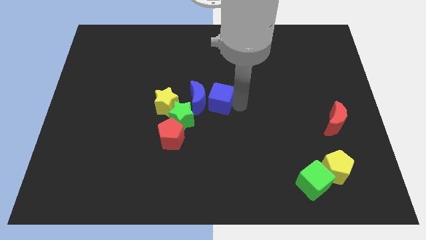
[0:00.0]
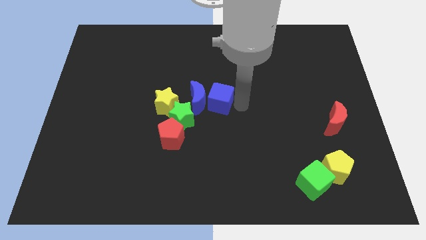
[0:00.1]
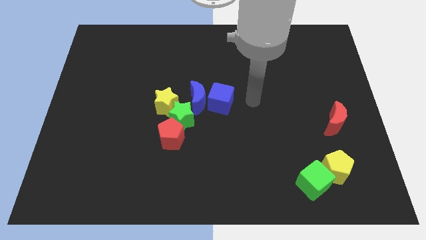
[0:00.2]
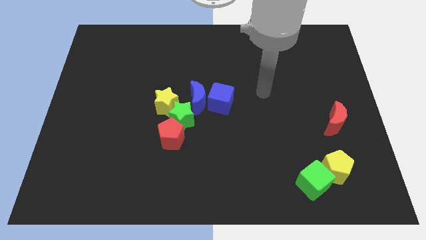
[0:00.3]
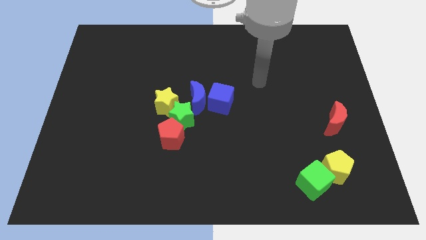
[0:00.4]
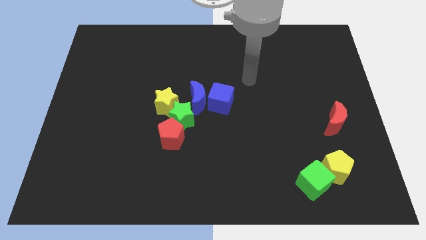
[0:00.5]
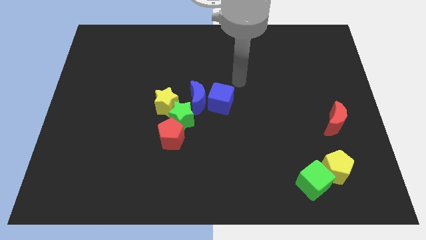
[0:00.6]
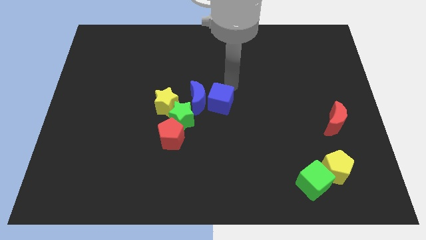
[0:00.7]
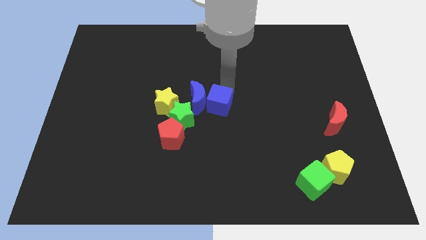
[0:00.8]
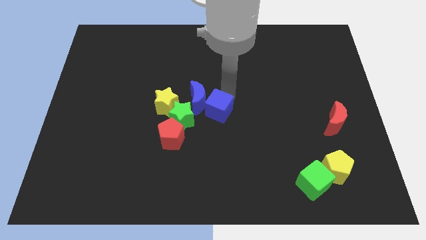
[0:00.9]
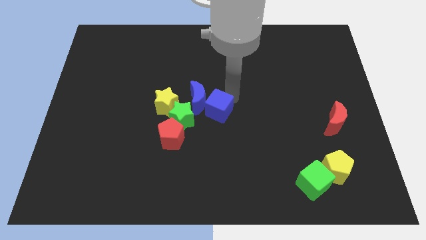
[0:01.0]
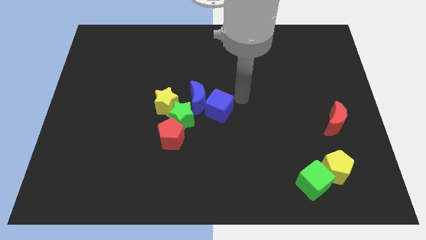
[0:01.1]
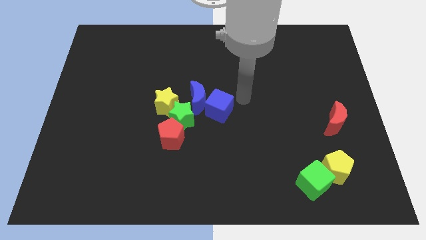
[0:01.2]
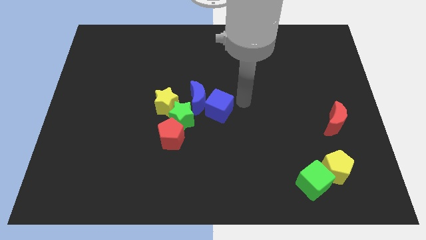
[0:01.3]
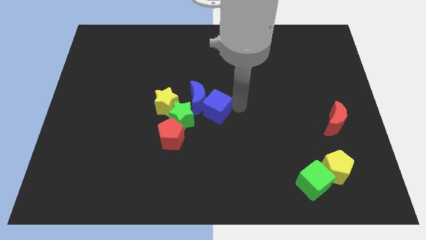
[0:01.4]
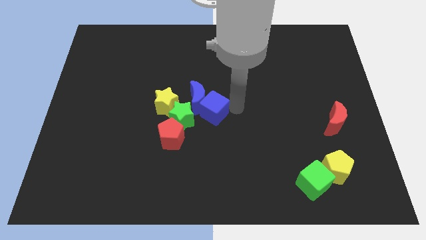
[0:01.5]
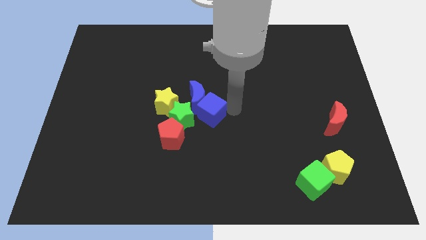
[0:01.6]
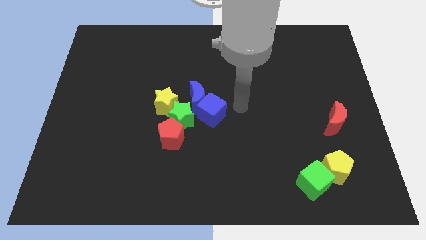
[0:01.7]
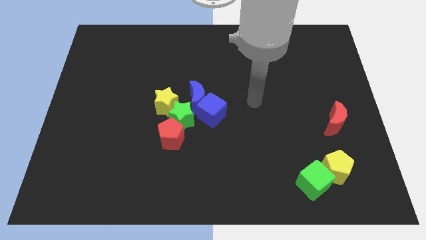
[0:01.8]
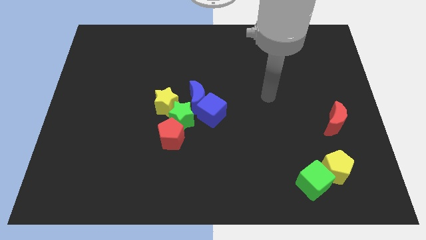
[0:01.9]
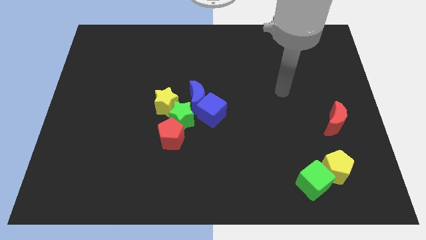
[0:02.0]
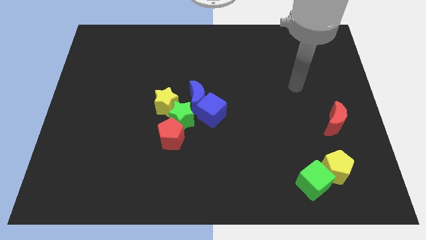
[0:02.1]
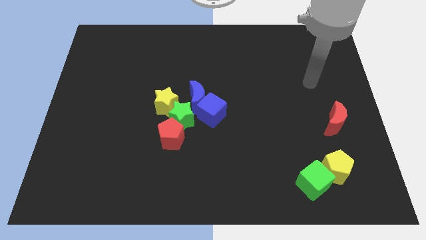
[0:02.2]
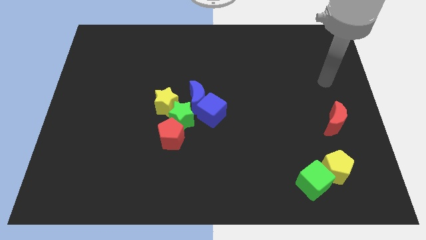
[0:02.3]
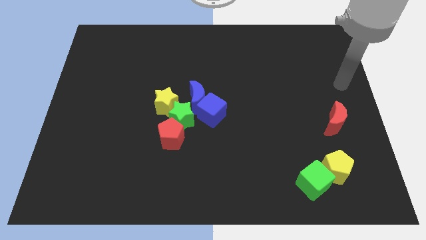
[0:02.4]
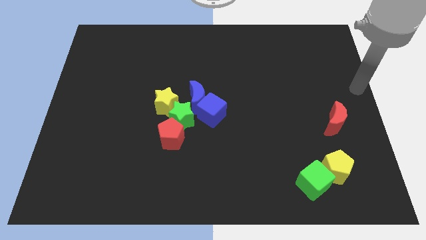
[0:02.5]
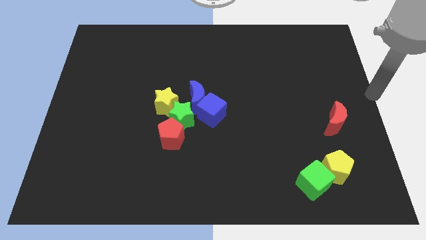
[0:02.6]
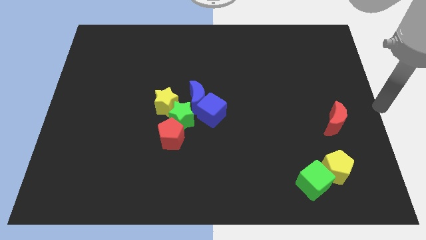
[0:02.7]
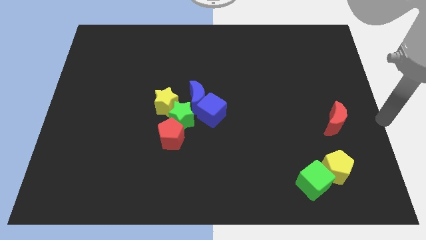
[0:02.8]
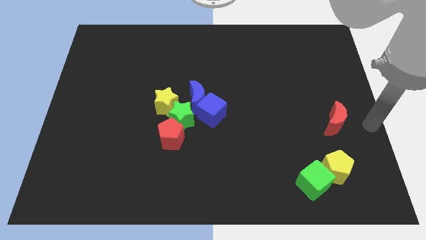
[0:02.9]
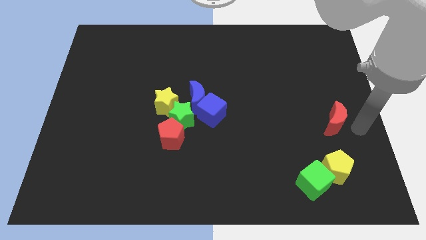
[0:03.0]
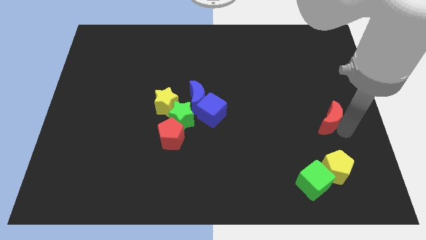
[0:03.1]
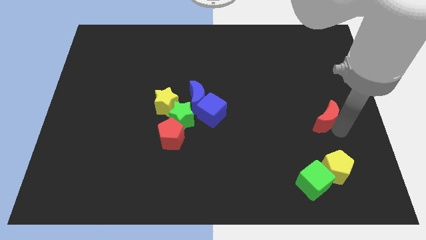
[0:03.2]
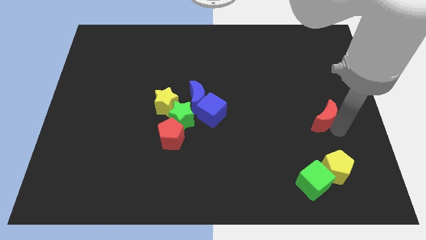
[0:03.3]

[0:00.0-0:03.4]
push the blue cube to the bottom side of the blue moon

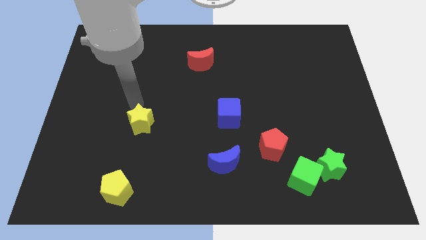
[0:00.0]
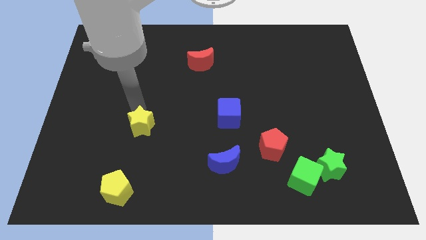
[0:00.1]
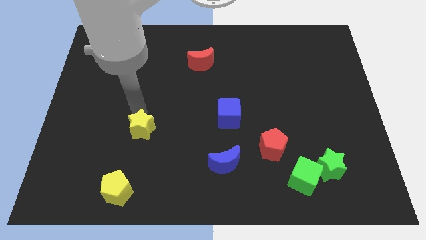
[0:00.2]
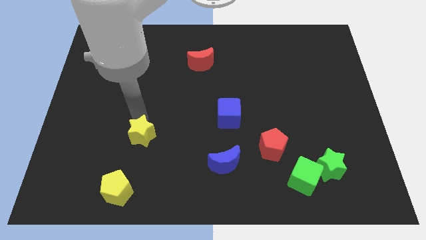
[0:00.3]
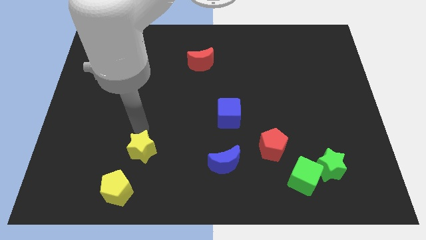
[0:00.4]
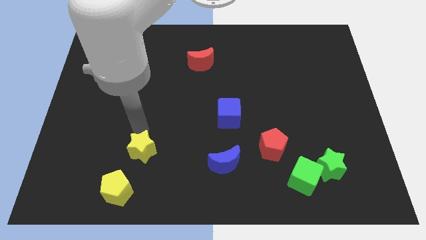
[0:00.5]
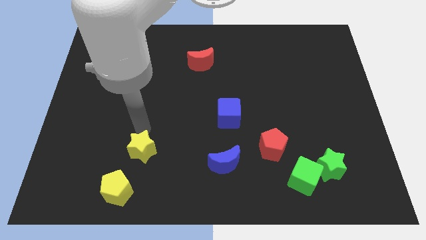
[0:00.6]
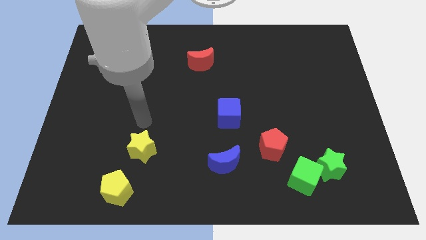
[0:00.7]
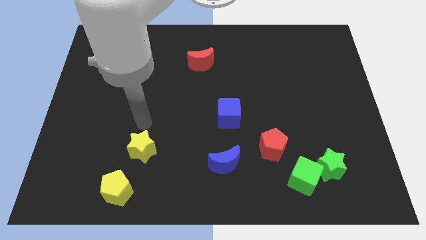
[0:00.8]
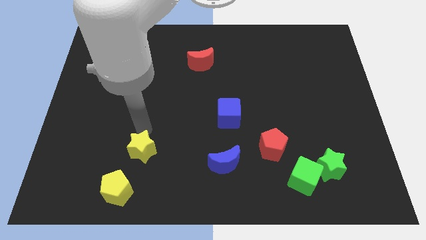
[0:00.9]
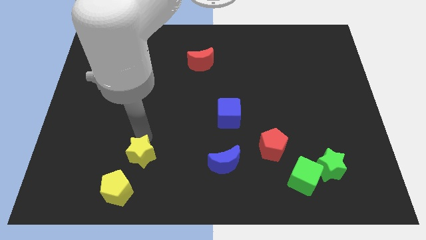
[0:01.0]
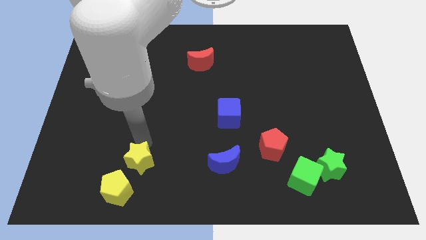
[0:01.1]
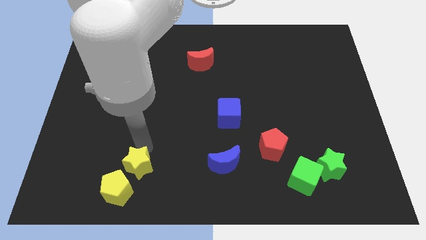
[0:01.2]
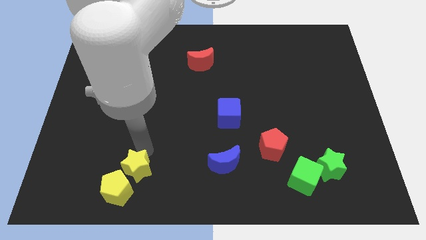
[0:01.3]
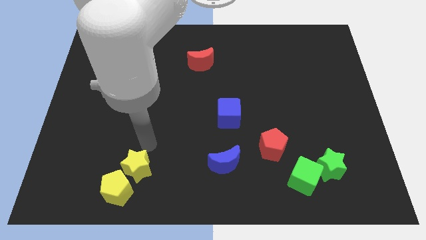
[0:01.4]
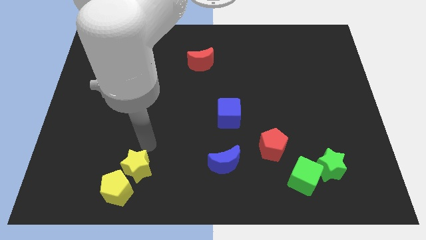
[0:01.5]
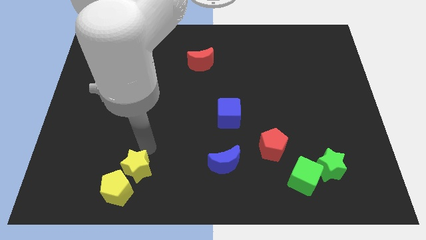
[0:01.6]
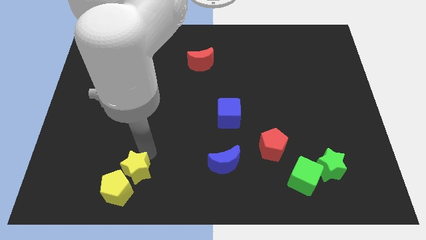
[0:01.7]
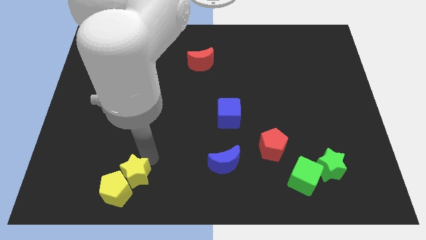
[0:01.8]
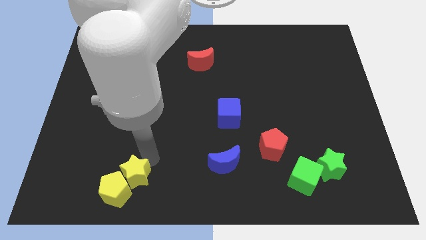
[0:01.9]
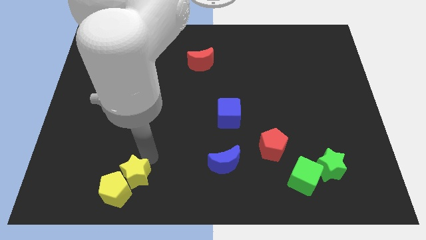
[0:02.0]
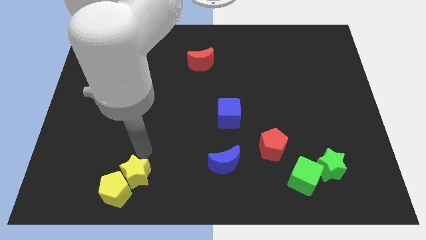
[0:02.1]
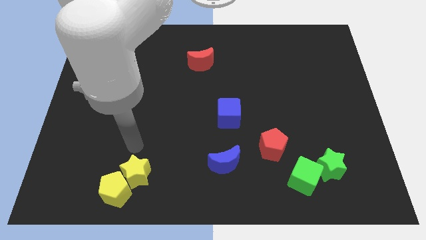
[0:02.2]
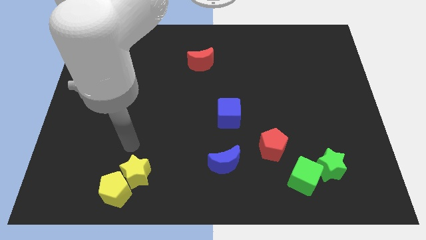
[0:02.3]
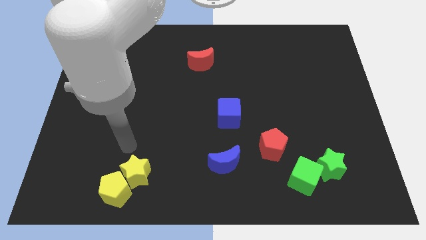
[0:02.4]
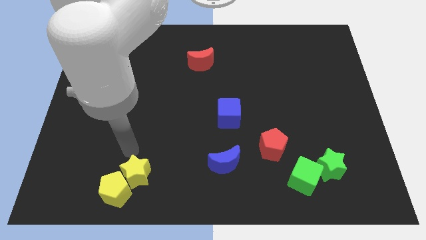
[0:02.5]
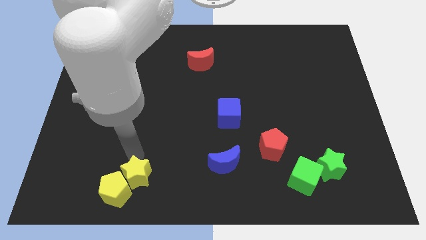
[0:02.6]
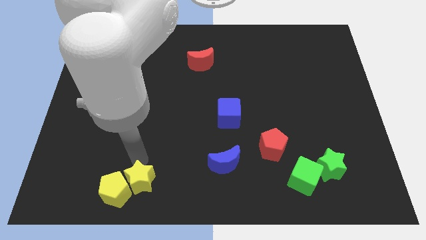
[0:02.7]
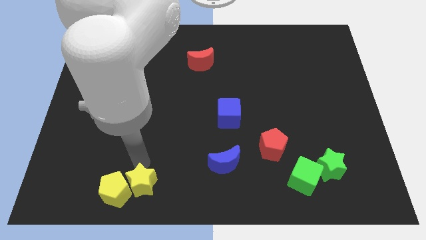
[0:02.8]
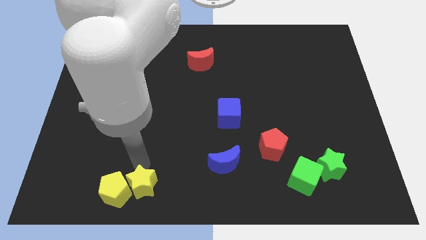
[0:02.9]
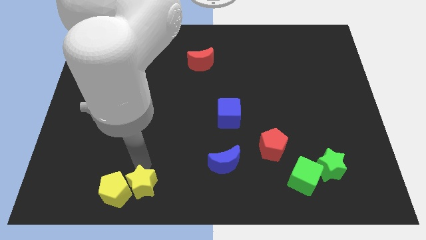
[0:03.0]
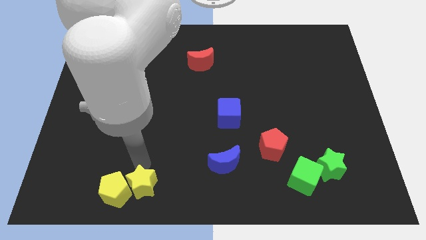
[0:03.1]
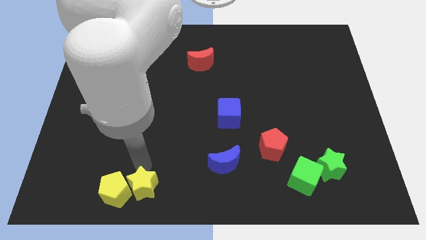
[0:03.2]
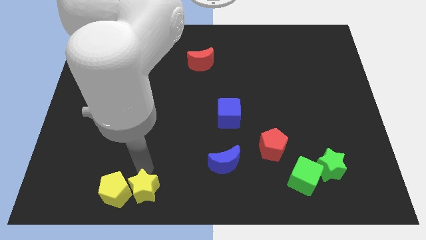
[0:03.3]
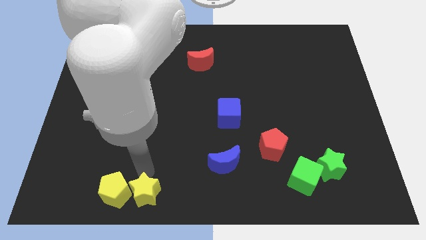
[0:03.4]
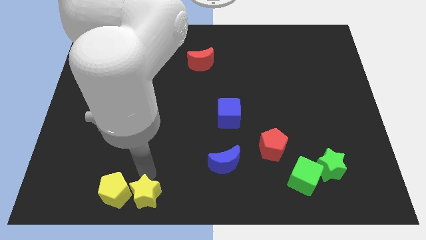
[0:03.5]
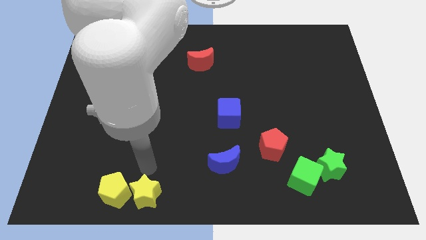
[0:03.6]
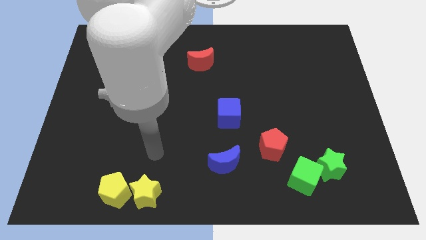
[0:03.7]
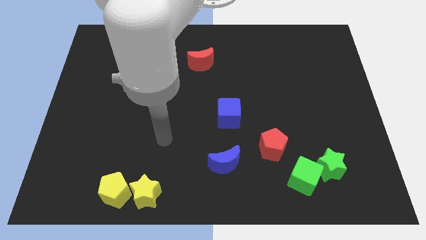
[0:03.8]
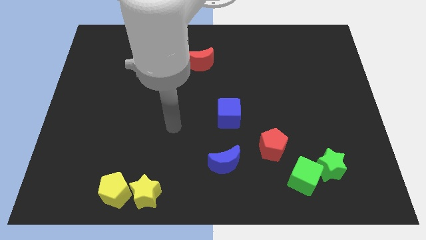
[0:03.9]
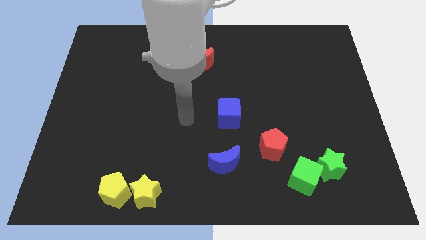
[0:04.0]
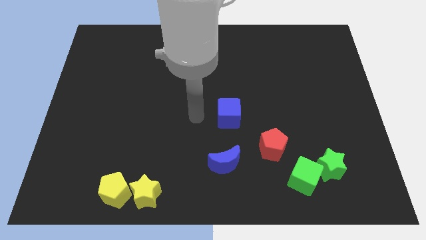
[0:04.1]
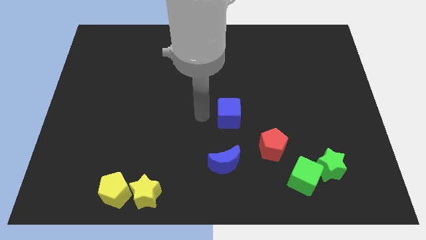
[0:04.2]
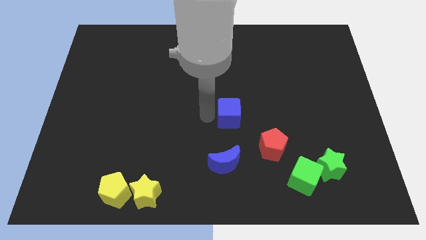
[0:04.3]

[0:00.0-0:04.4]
place the yellow star to the right of the yellow pentagon

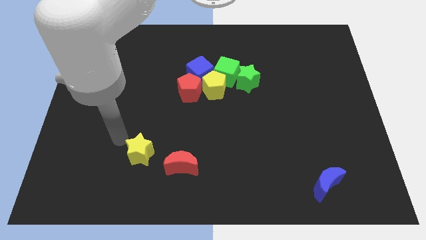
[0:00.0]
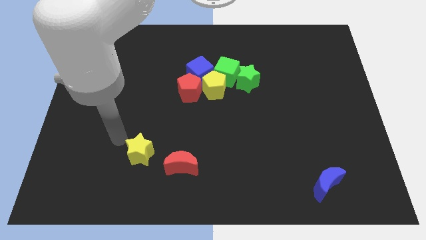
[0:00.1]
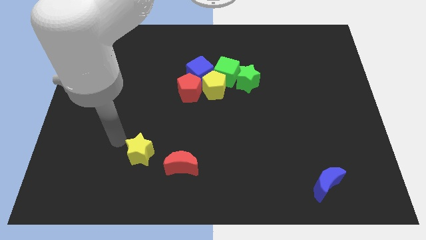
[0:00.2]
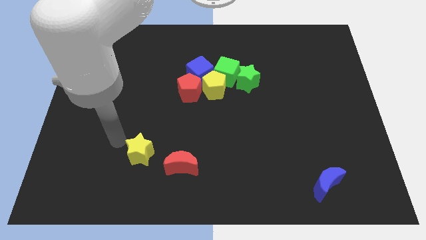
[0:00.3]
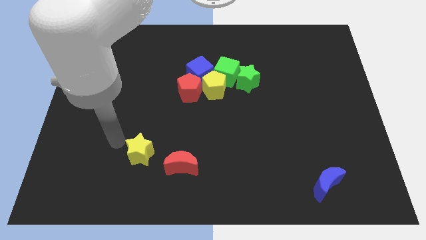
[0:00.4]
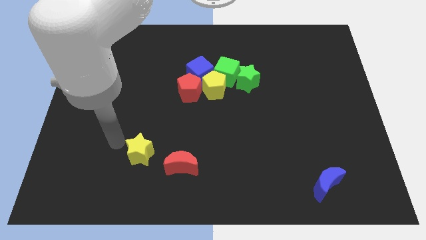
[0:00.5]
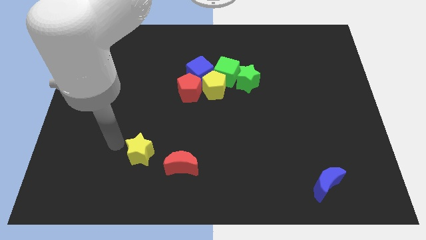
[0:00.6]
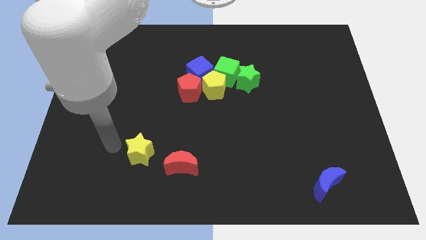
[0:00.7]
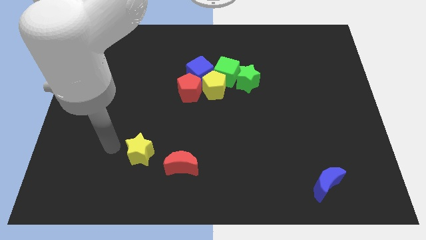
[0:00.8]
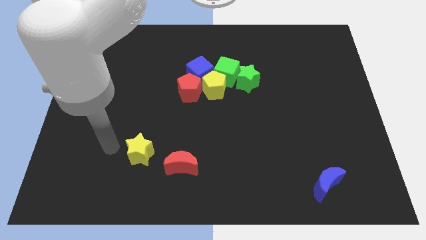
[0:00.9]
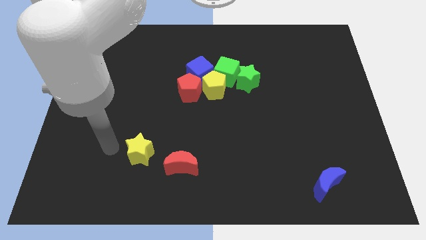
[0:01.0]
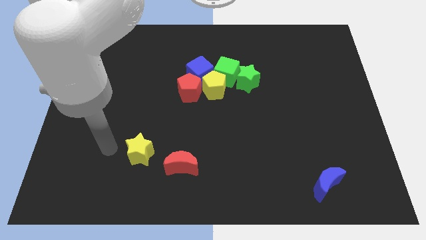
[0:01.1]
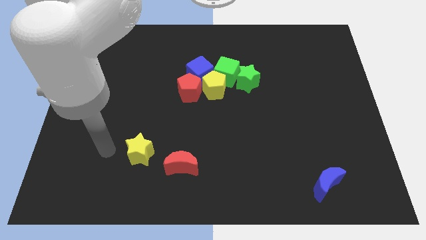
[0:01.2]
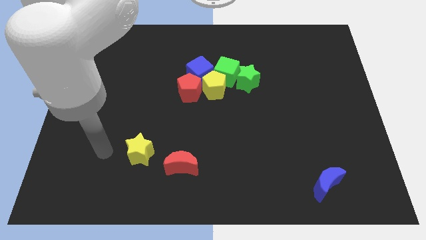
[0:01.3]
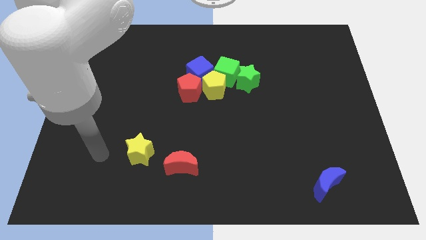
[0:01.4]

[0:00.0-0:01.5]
put your arm at the left side of the yellow star
